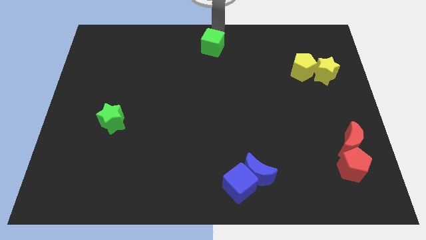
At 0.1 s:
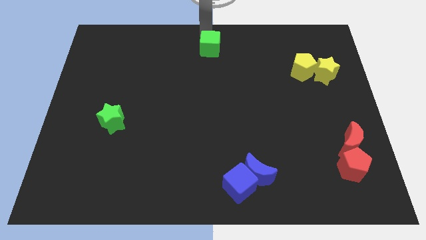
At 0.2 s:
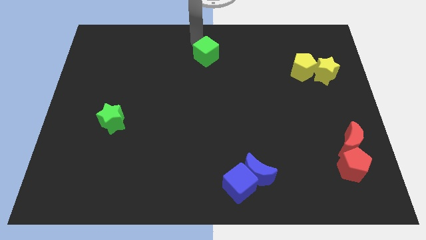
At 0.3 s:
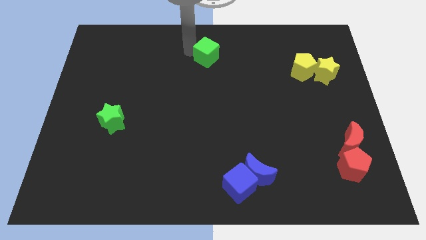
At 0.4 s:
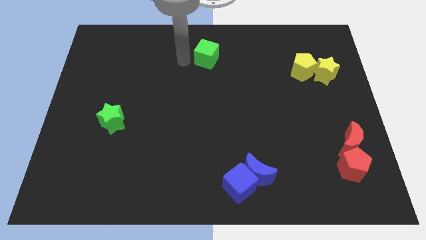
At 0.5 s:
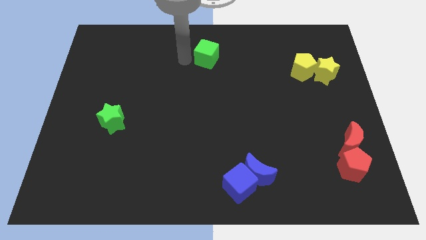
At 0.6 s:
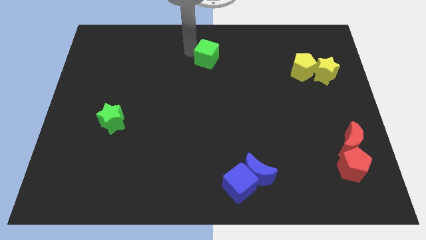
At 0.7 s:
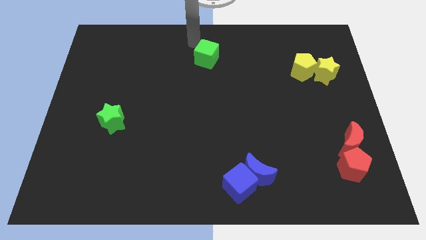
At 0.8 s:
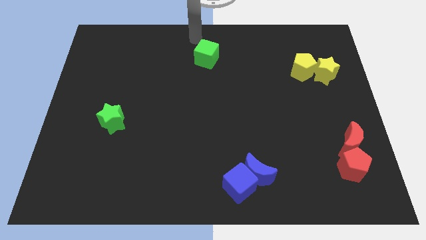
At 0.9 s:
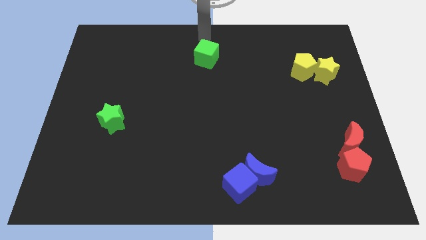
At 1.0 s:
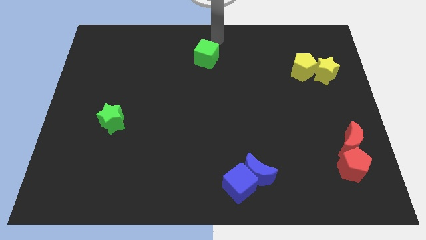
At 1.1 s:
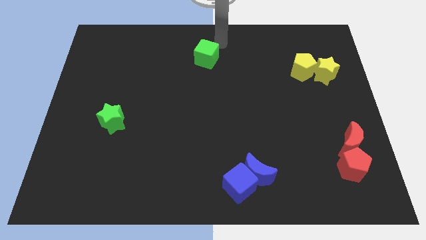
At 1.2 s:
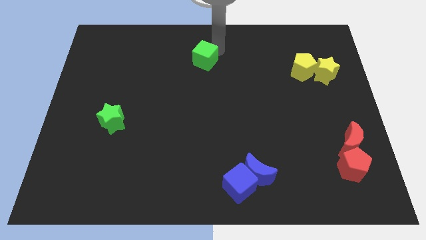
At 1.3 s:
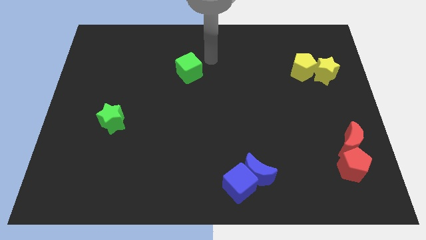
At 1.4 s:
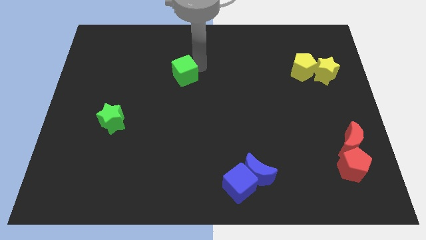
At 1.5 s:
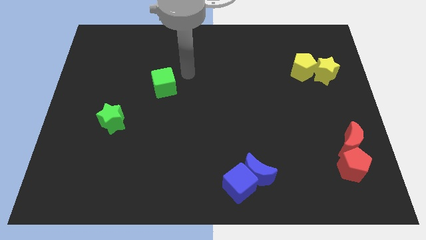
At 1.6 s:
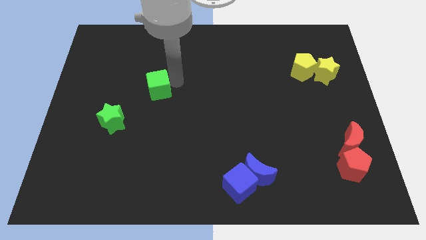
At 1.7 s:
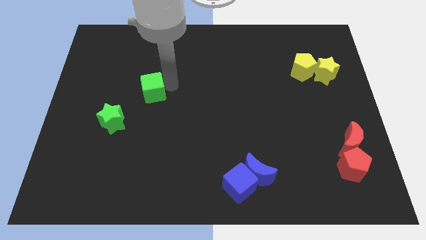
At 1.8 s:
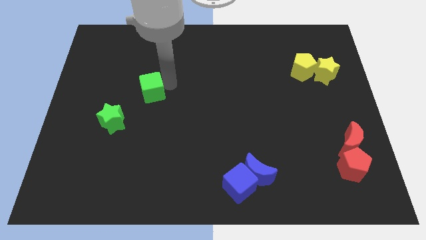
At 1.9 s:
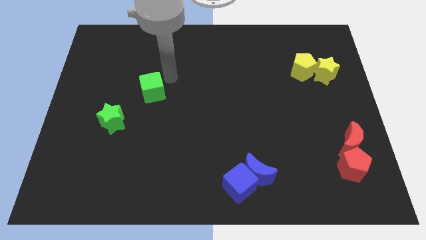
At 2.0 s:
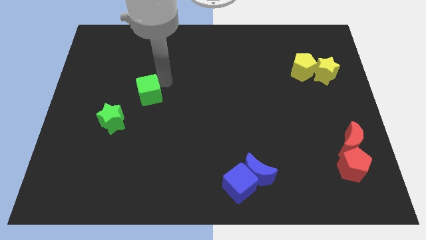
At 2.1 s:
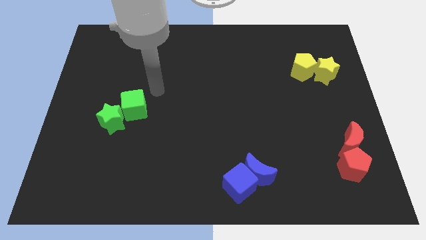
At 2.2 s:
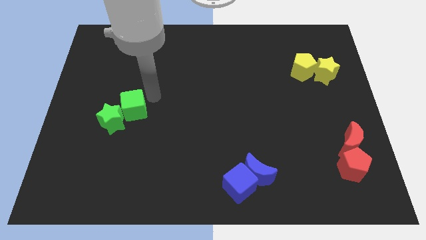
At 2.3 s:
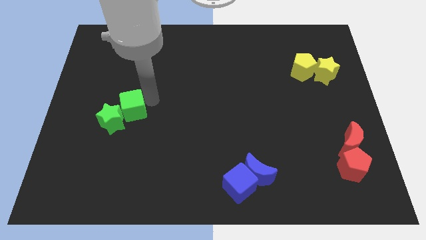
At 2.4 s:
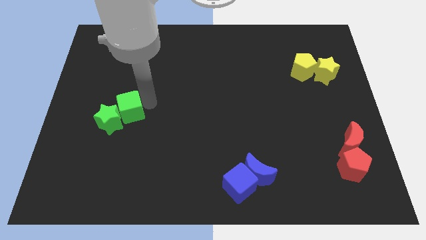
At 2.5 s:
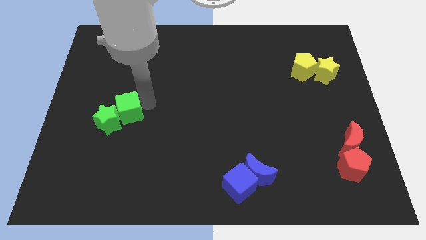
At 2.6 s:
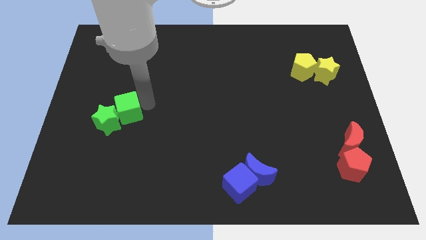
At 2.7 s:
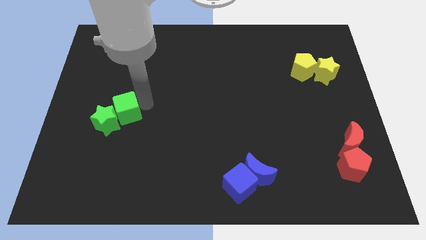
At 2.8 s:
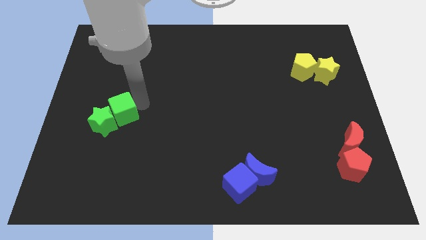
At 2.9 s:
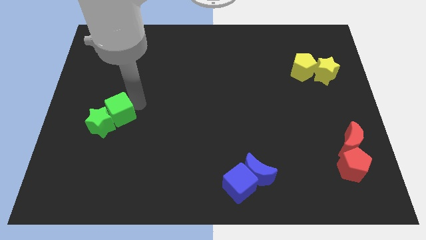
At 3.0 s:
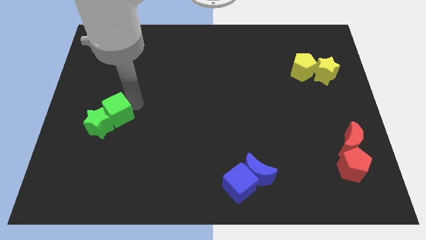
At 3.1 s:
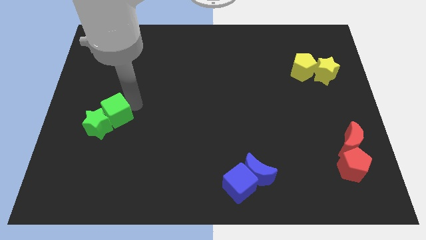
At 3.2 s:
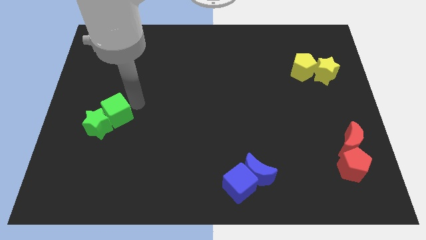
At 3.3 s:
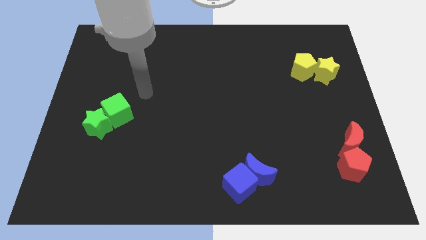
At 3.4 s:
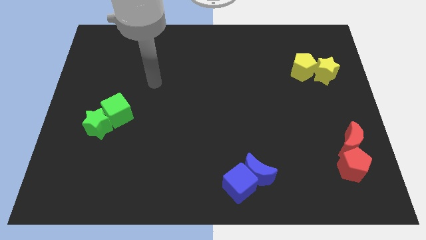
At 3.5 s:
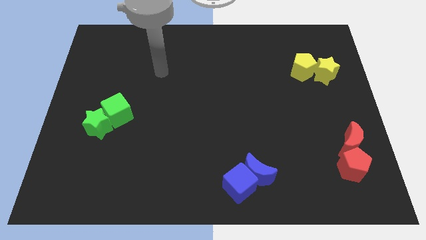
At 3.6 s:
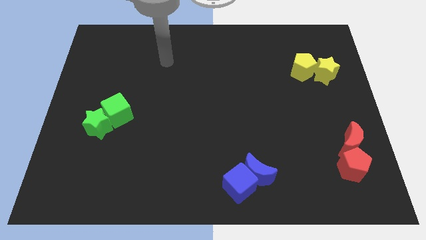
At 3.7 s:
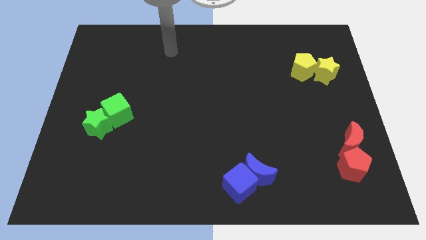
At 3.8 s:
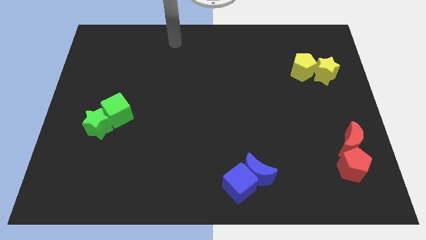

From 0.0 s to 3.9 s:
move the green cube diagonal to the green star

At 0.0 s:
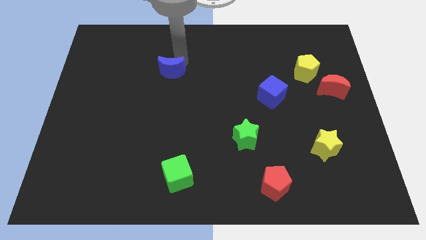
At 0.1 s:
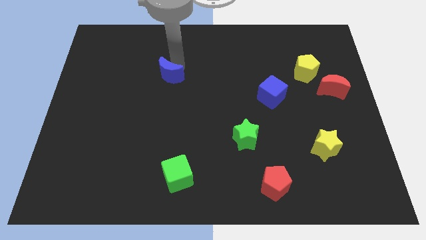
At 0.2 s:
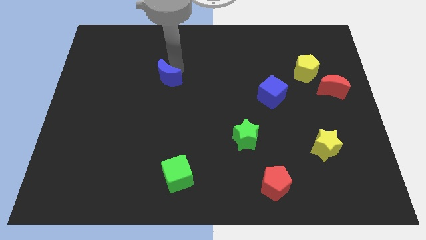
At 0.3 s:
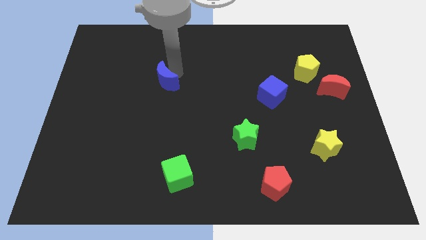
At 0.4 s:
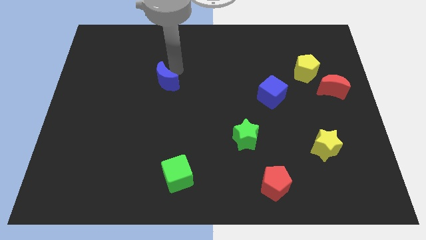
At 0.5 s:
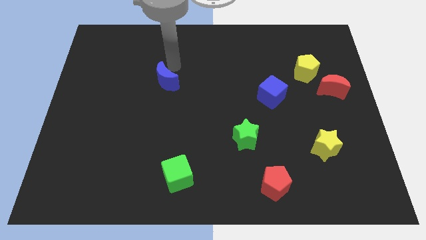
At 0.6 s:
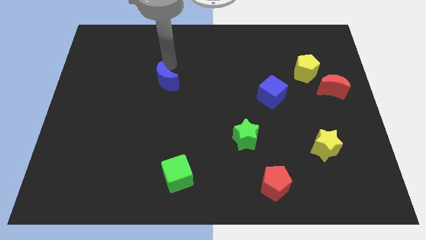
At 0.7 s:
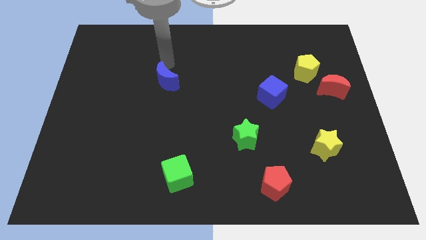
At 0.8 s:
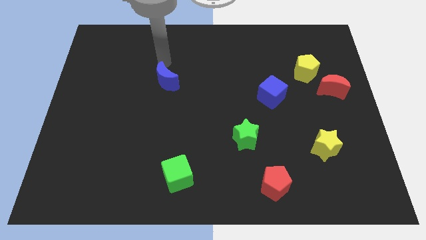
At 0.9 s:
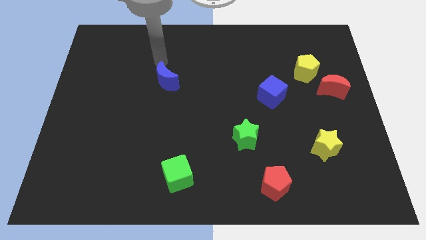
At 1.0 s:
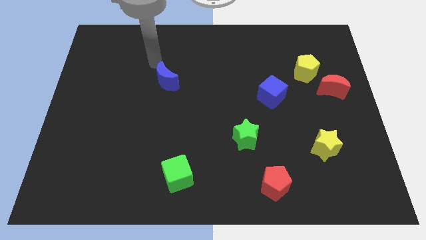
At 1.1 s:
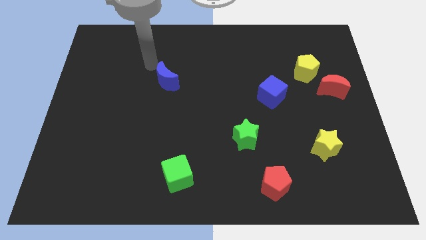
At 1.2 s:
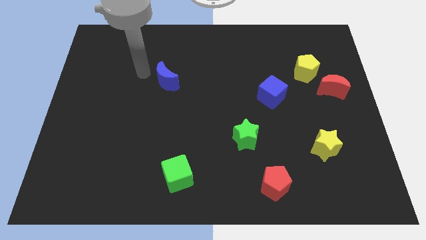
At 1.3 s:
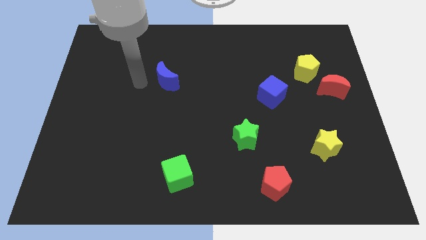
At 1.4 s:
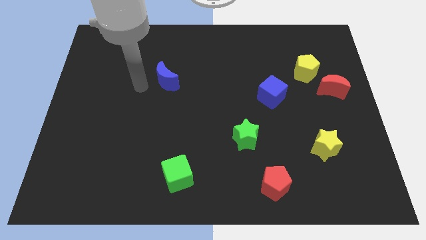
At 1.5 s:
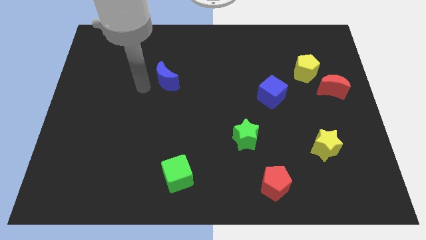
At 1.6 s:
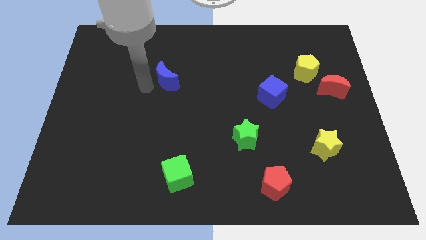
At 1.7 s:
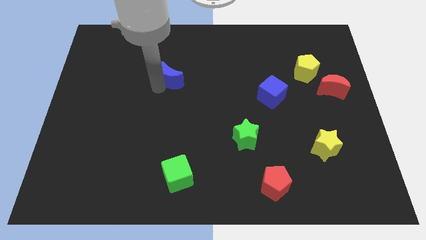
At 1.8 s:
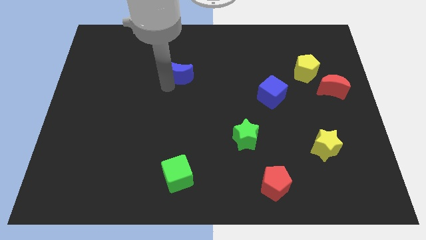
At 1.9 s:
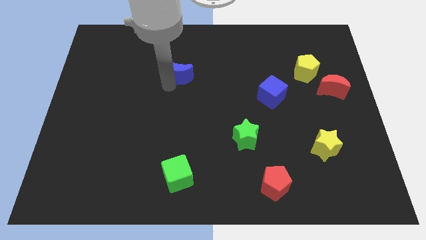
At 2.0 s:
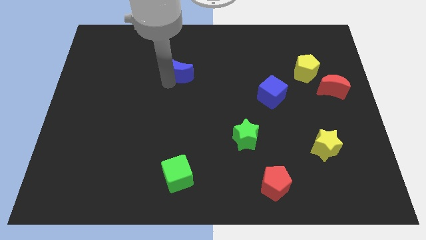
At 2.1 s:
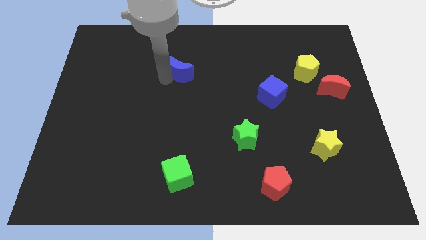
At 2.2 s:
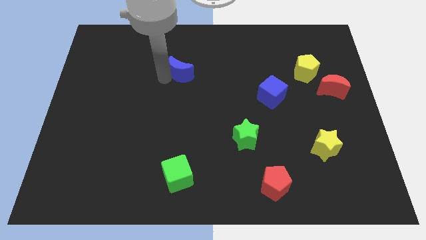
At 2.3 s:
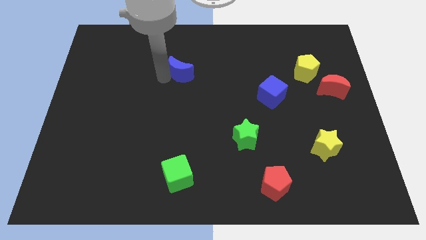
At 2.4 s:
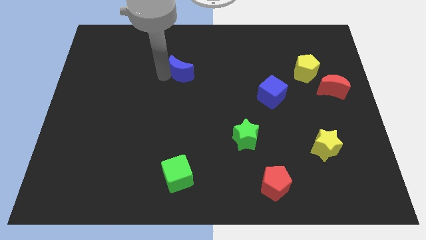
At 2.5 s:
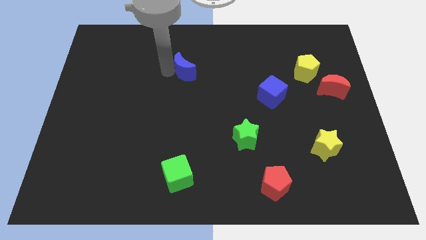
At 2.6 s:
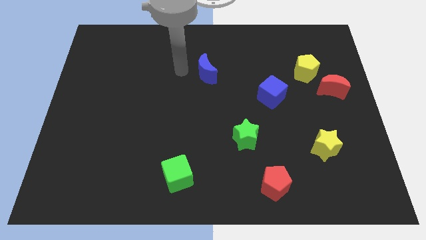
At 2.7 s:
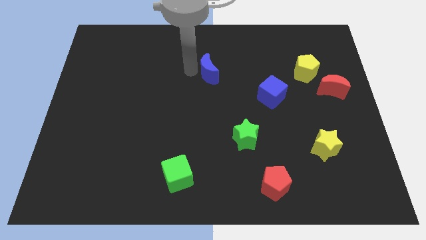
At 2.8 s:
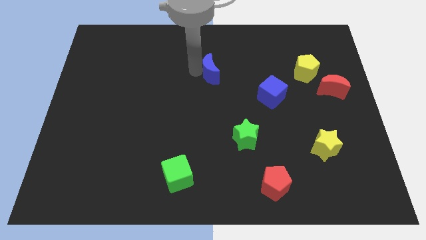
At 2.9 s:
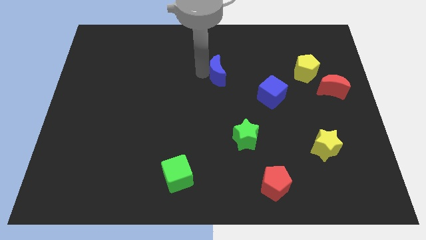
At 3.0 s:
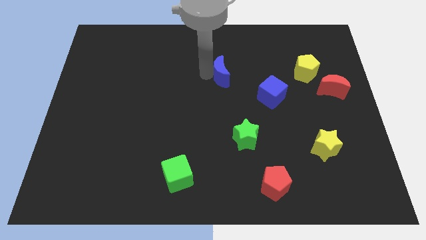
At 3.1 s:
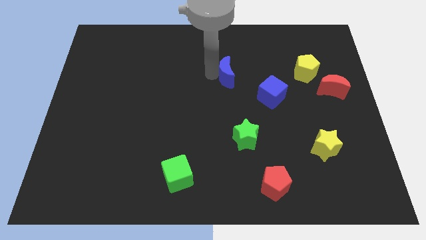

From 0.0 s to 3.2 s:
slide the blue moon towards the blue cube

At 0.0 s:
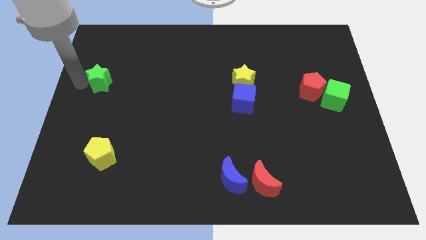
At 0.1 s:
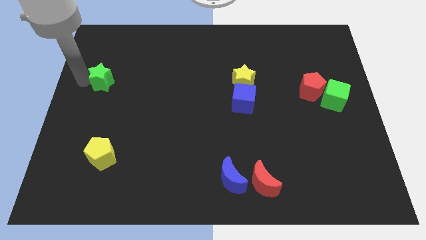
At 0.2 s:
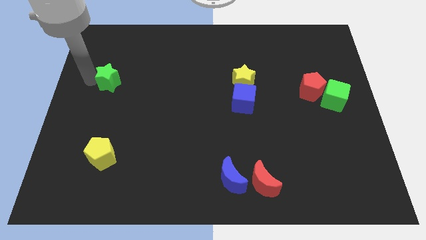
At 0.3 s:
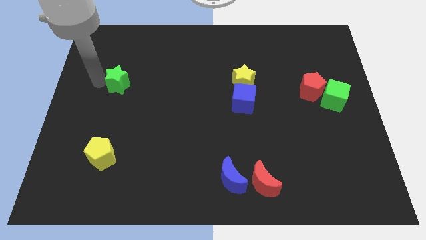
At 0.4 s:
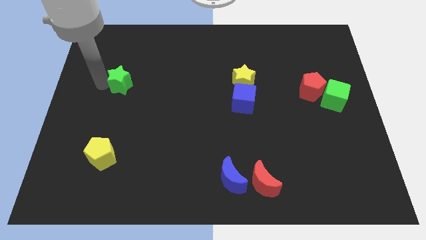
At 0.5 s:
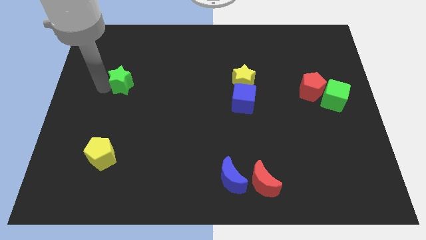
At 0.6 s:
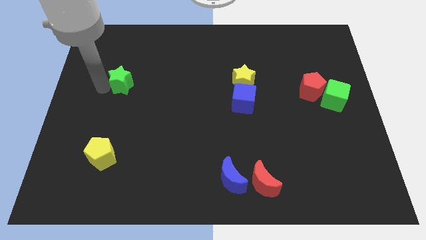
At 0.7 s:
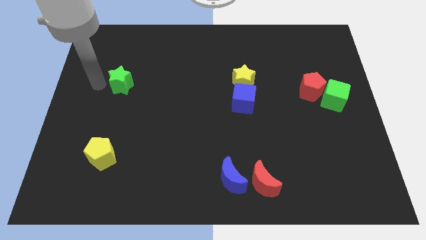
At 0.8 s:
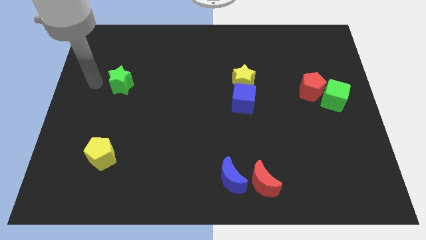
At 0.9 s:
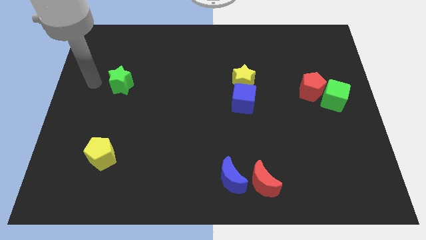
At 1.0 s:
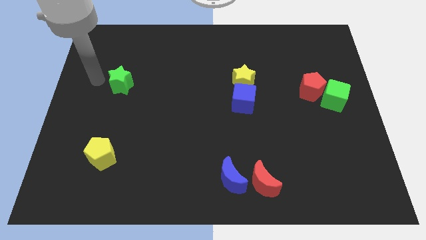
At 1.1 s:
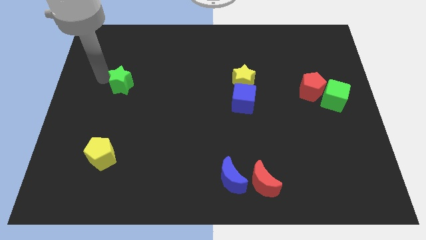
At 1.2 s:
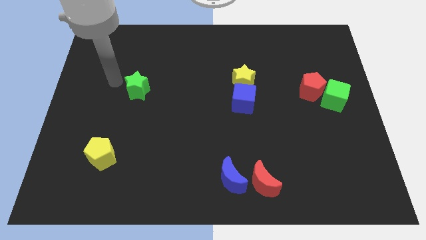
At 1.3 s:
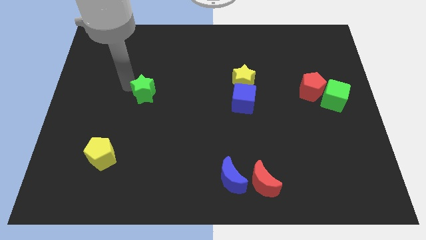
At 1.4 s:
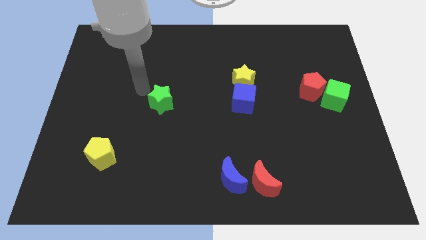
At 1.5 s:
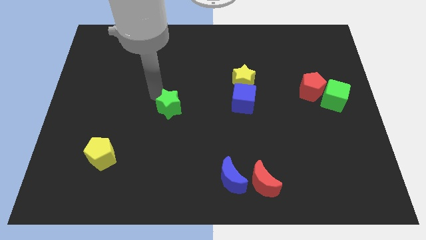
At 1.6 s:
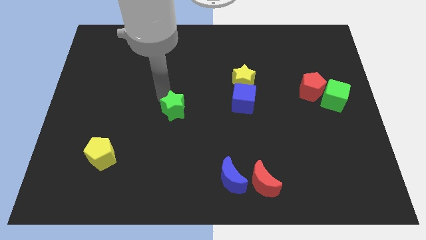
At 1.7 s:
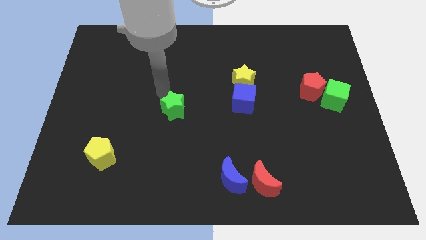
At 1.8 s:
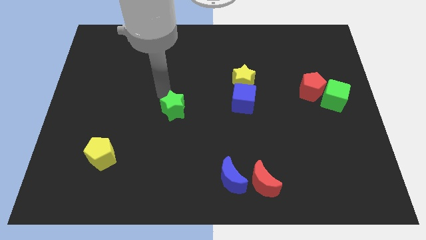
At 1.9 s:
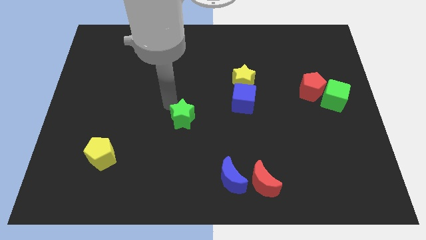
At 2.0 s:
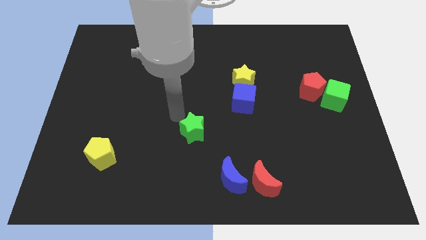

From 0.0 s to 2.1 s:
move the green star between yellow pentagon and blue cube
